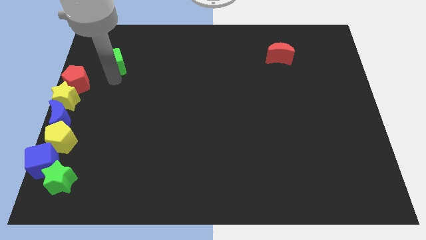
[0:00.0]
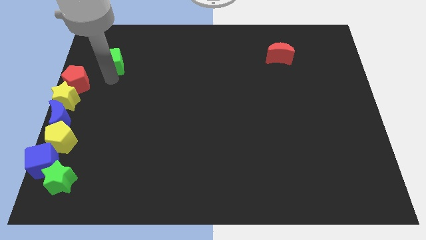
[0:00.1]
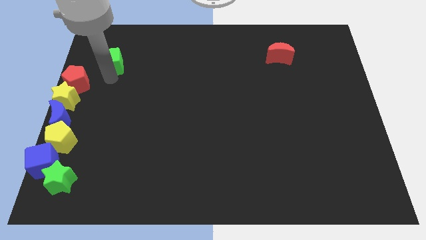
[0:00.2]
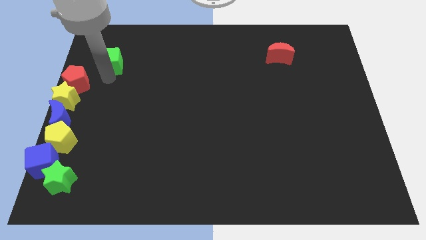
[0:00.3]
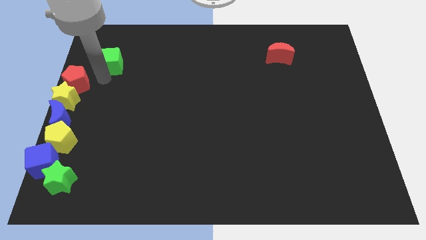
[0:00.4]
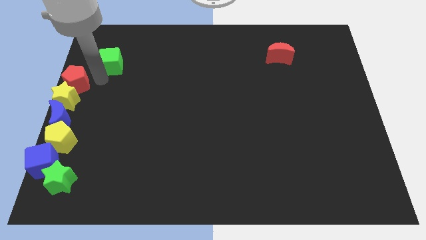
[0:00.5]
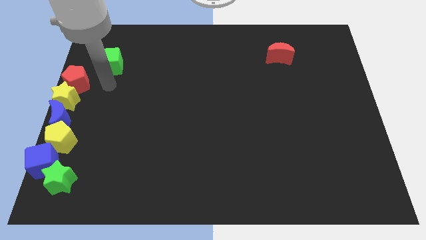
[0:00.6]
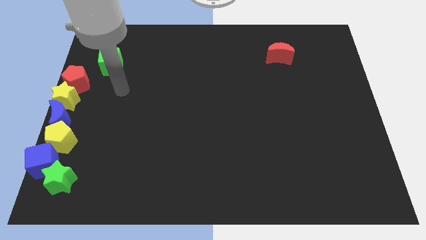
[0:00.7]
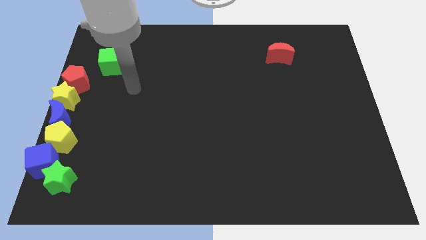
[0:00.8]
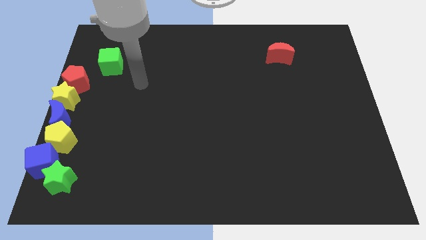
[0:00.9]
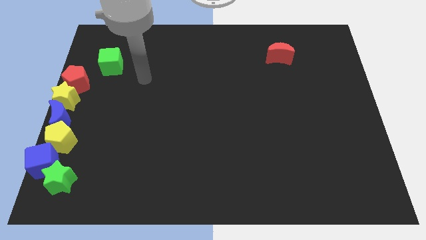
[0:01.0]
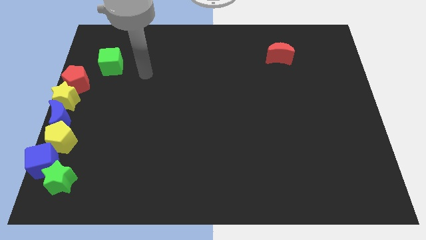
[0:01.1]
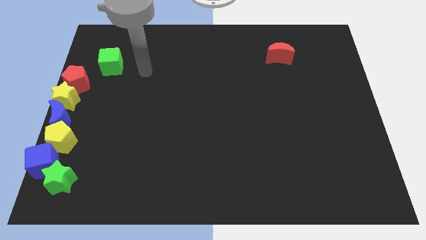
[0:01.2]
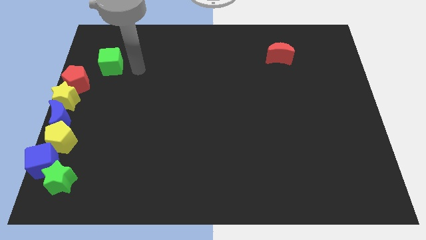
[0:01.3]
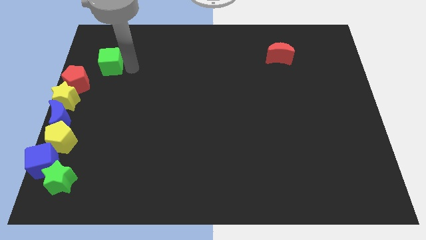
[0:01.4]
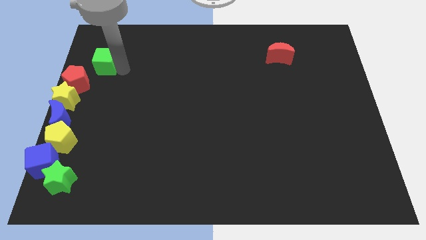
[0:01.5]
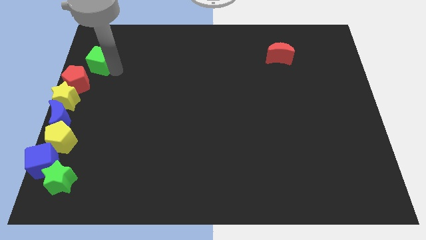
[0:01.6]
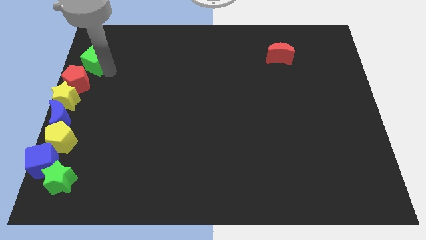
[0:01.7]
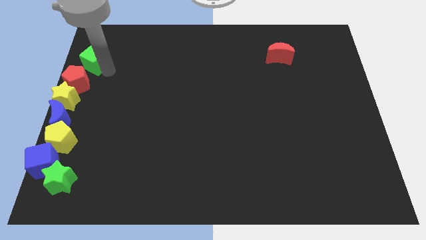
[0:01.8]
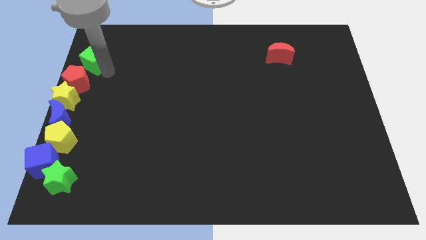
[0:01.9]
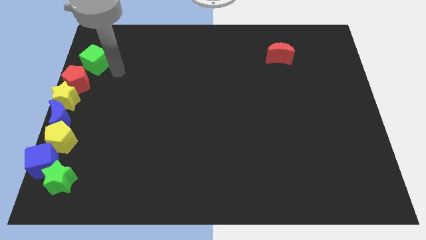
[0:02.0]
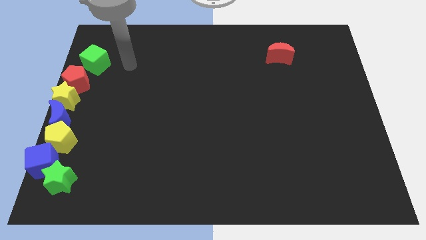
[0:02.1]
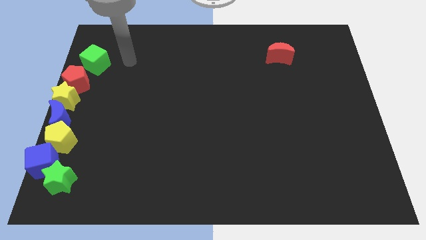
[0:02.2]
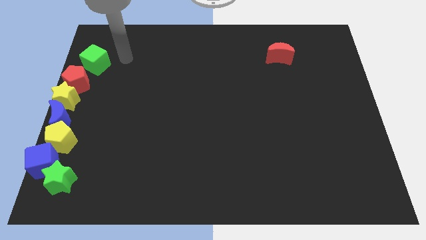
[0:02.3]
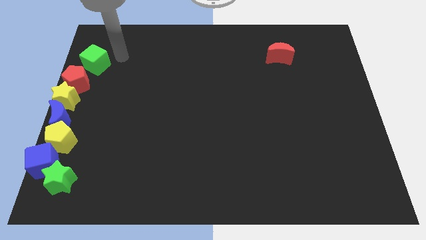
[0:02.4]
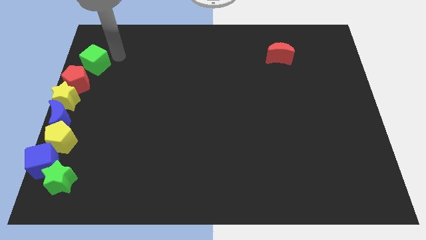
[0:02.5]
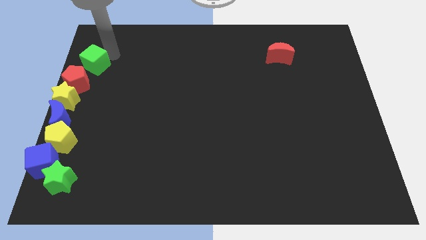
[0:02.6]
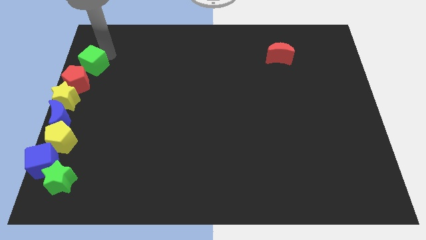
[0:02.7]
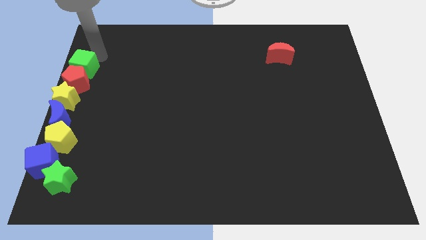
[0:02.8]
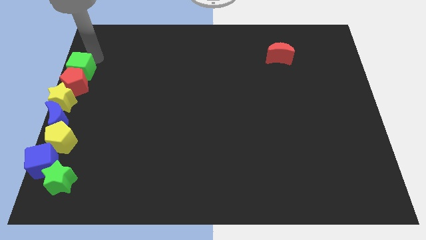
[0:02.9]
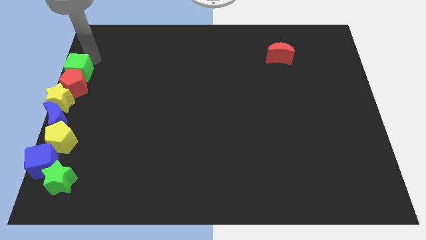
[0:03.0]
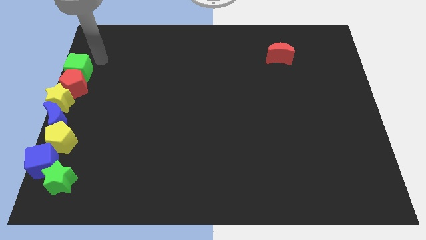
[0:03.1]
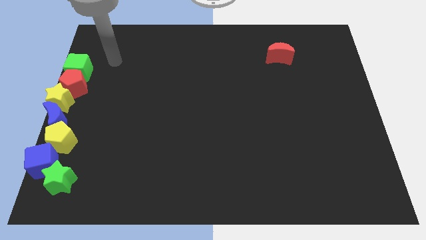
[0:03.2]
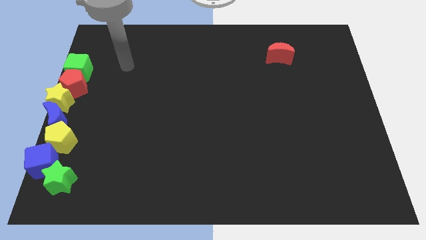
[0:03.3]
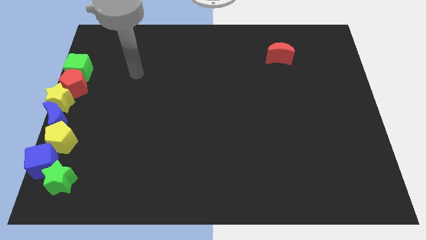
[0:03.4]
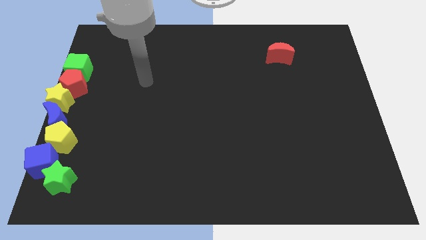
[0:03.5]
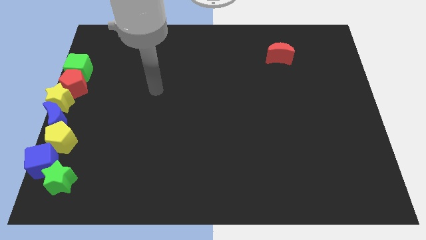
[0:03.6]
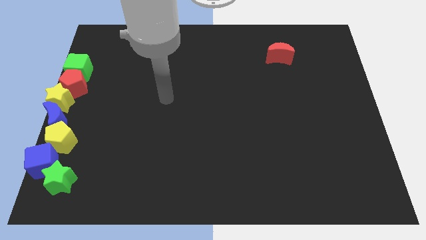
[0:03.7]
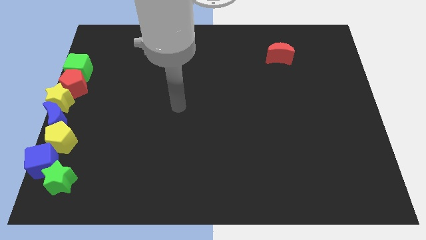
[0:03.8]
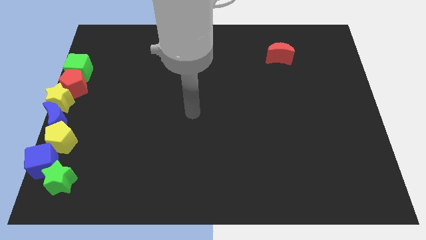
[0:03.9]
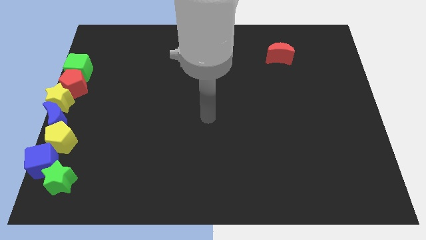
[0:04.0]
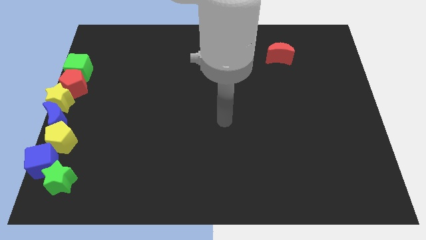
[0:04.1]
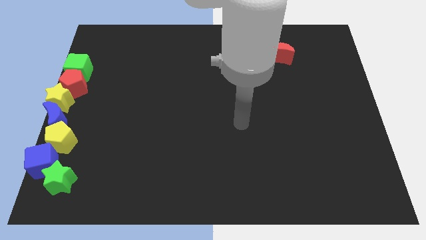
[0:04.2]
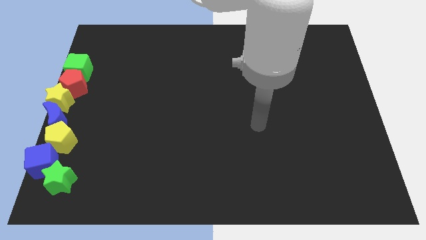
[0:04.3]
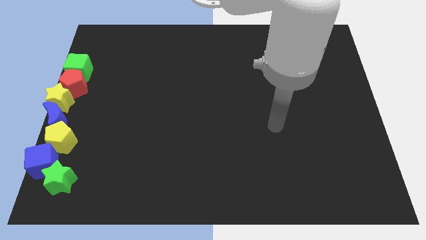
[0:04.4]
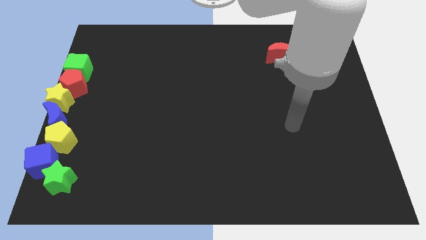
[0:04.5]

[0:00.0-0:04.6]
place the green cube above the red pentagon

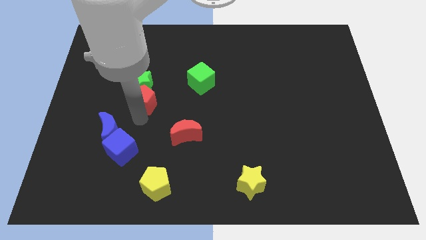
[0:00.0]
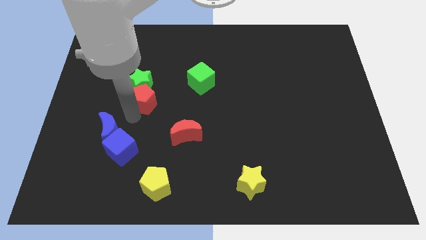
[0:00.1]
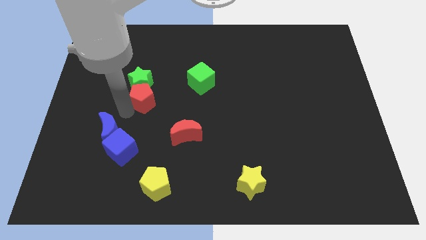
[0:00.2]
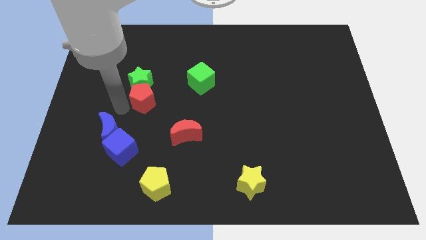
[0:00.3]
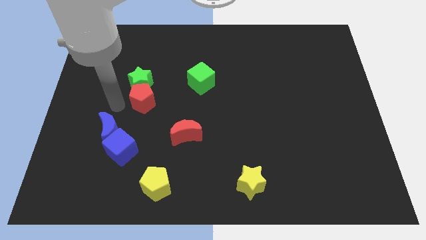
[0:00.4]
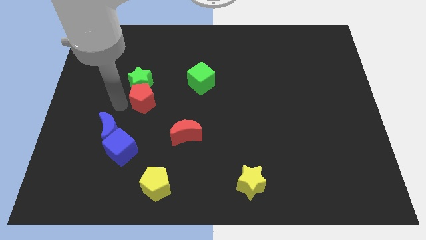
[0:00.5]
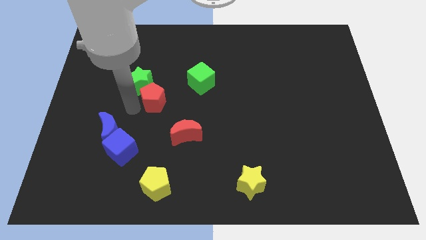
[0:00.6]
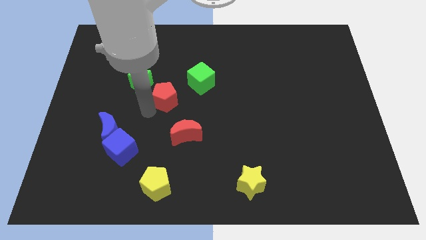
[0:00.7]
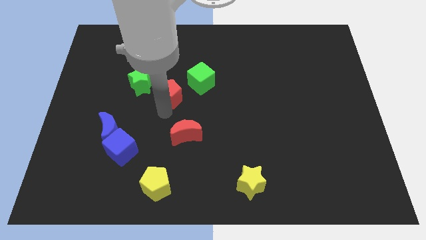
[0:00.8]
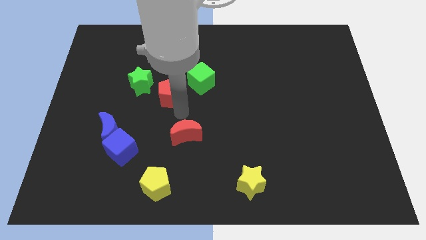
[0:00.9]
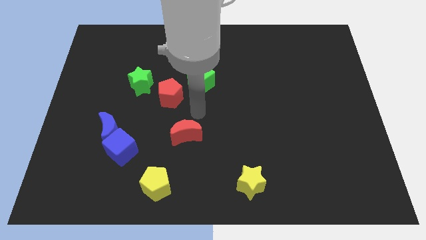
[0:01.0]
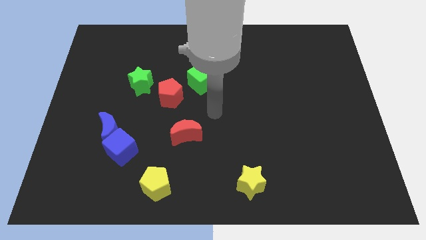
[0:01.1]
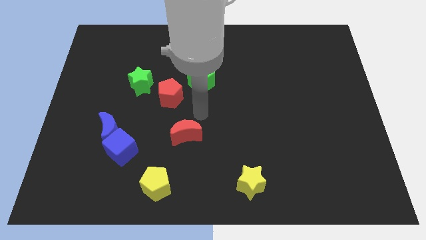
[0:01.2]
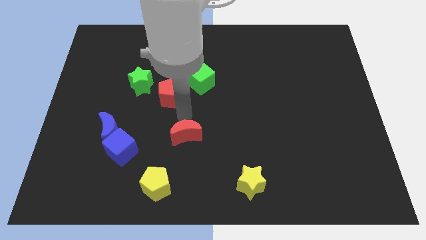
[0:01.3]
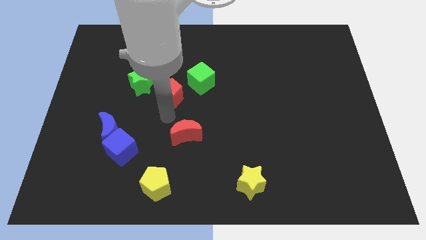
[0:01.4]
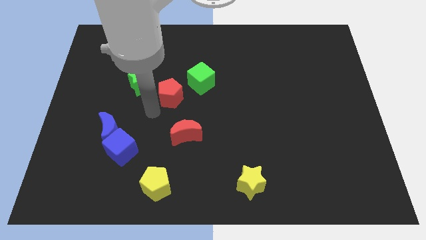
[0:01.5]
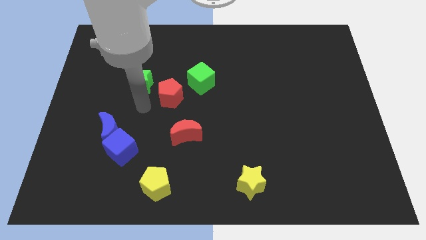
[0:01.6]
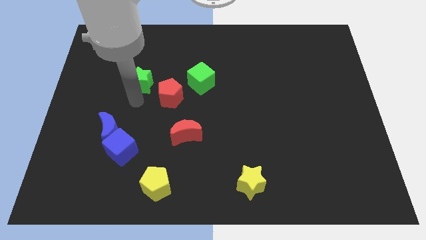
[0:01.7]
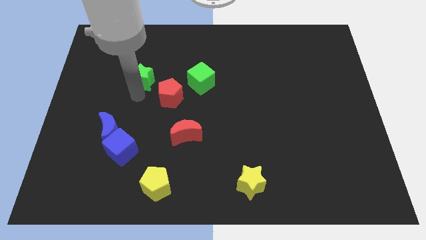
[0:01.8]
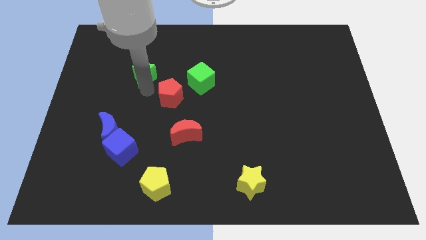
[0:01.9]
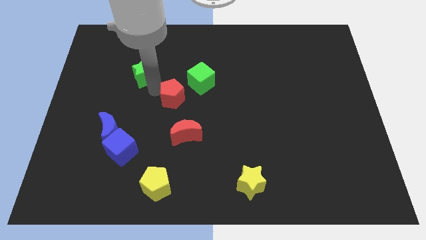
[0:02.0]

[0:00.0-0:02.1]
slightly move the green star up

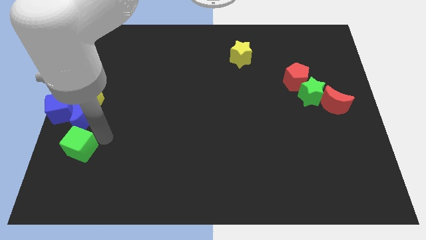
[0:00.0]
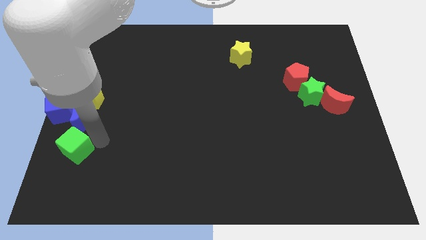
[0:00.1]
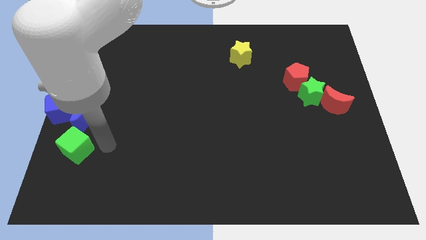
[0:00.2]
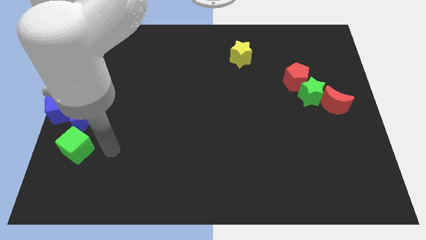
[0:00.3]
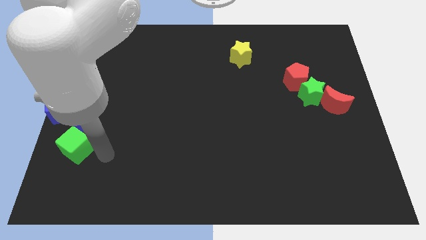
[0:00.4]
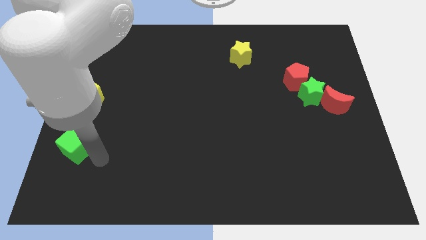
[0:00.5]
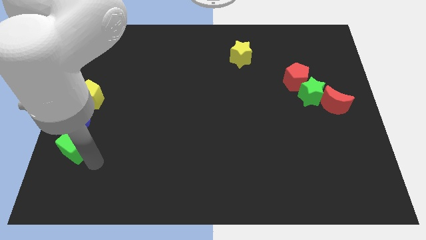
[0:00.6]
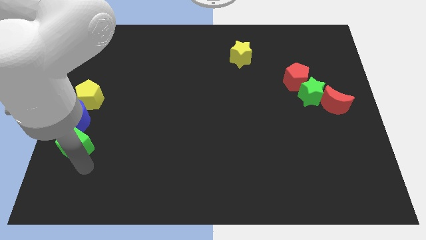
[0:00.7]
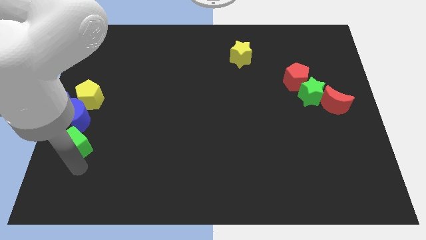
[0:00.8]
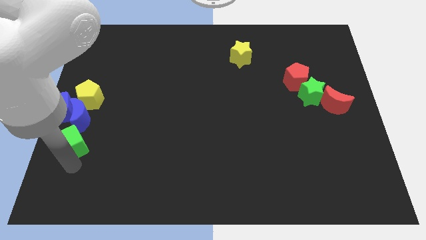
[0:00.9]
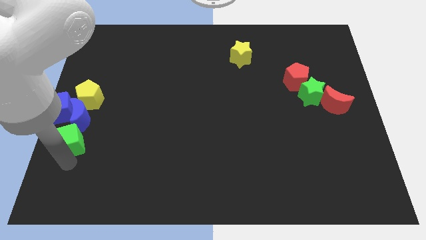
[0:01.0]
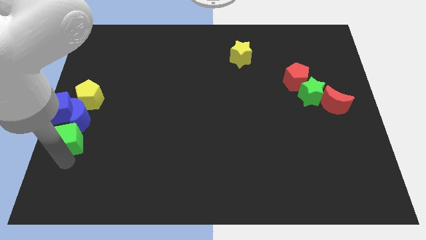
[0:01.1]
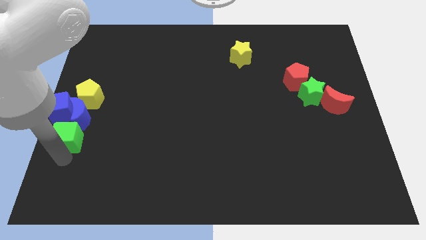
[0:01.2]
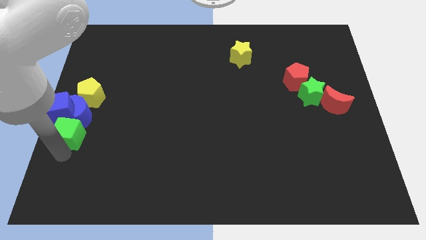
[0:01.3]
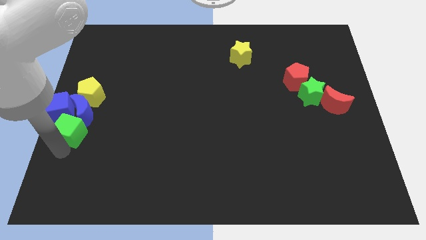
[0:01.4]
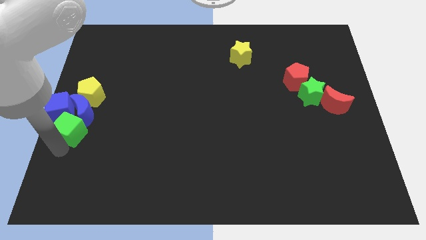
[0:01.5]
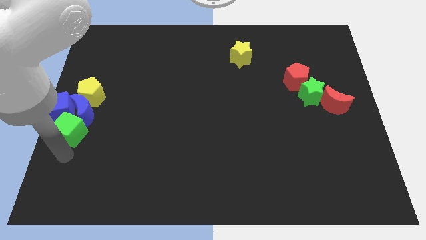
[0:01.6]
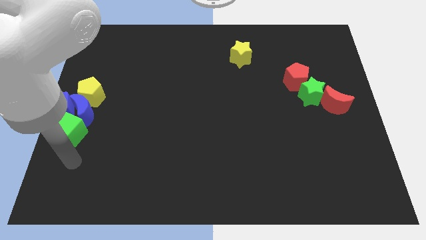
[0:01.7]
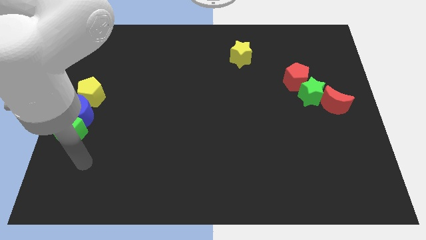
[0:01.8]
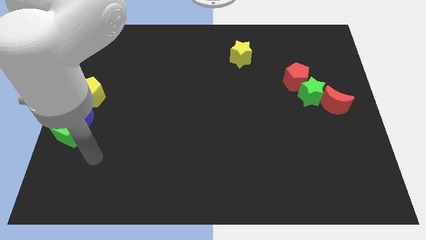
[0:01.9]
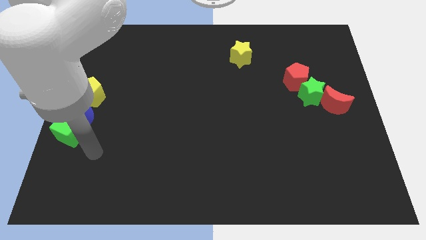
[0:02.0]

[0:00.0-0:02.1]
place green cube below the blue blocks

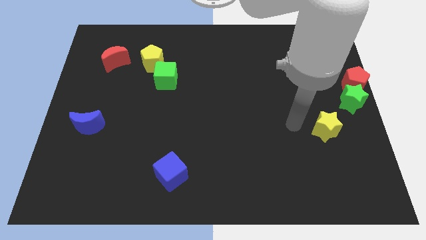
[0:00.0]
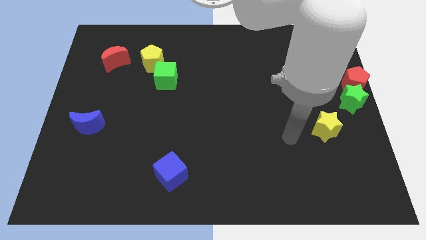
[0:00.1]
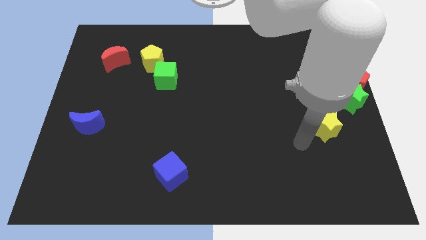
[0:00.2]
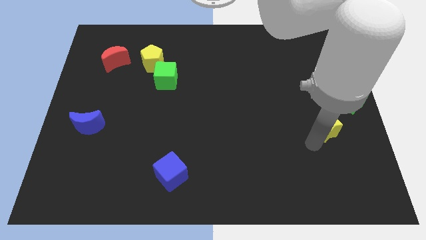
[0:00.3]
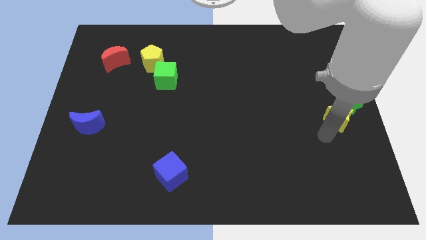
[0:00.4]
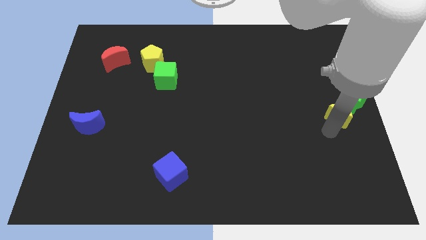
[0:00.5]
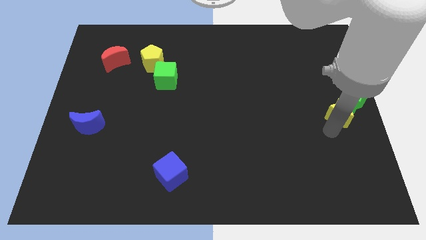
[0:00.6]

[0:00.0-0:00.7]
push the yellow star into the green star
